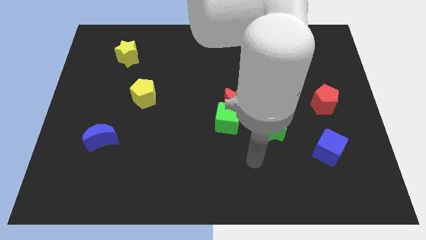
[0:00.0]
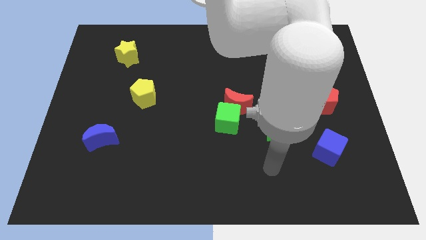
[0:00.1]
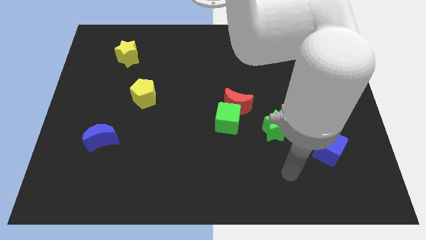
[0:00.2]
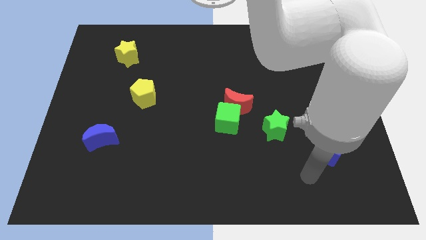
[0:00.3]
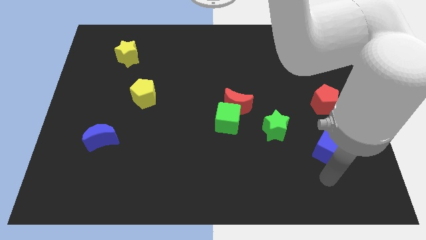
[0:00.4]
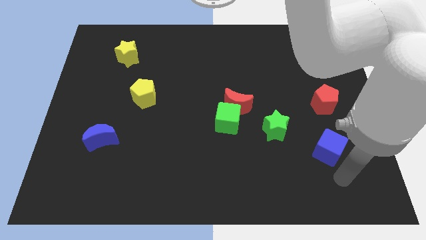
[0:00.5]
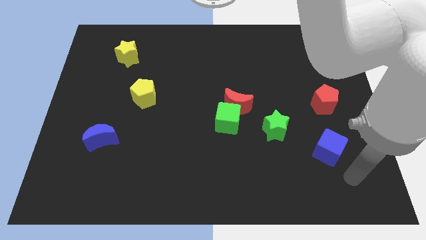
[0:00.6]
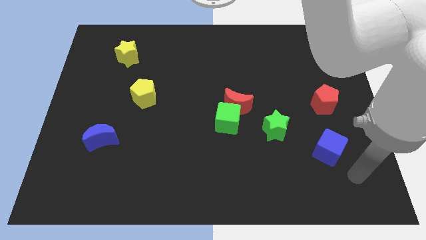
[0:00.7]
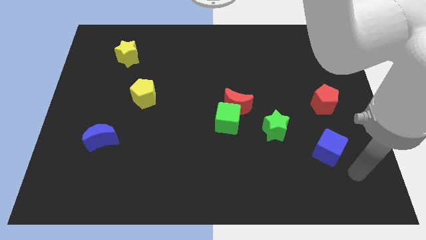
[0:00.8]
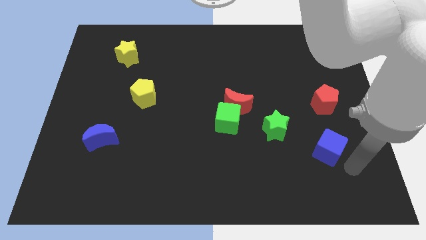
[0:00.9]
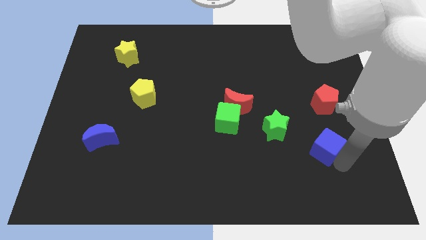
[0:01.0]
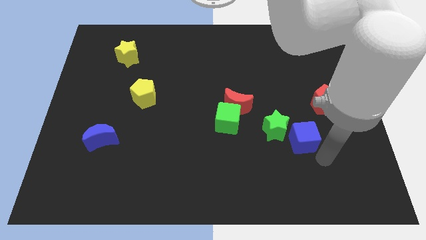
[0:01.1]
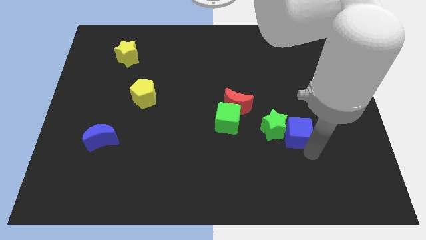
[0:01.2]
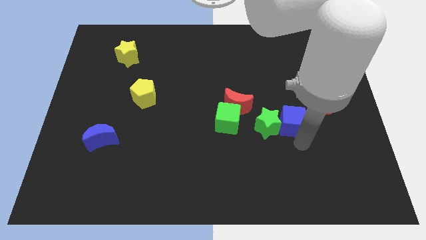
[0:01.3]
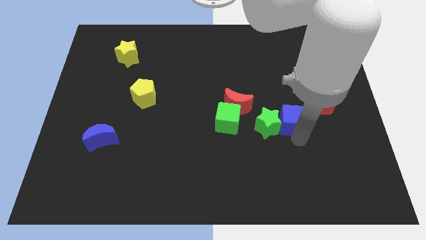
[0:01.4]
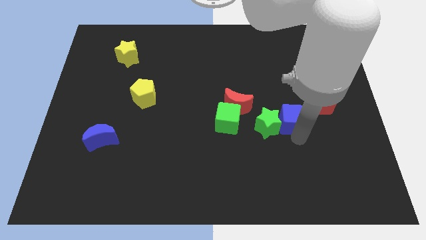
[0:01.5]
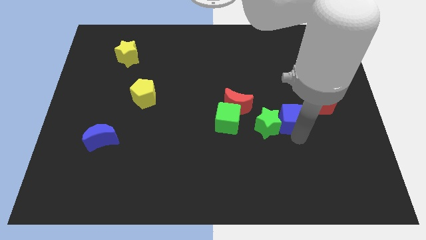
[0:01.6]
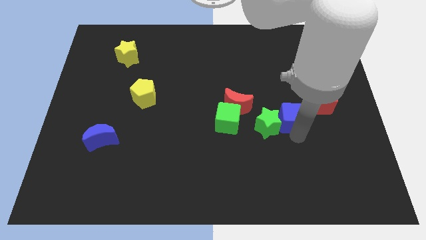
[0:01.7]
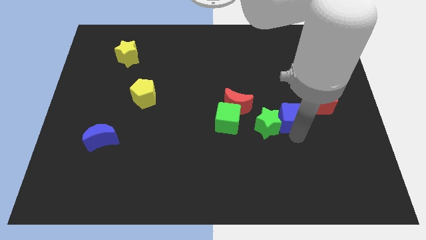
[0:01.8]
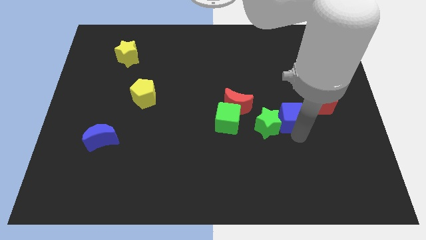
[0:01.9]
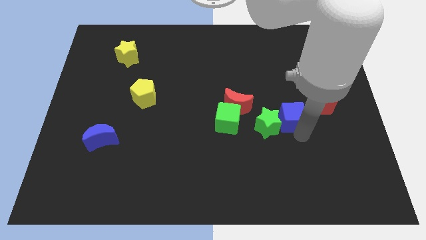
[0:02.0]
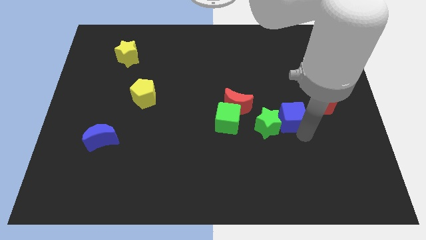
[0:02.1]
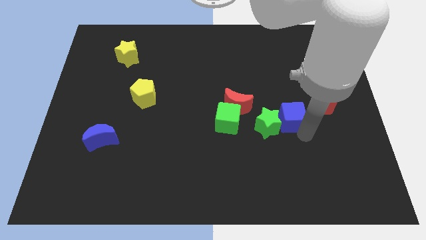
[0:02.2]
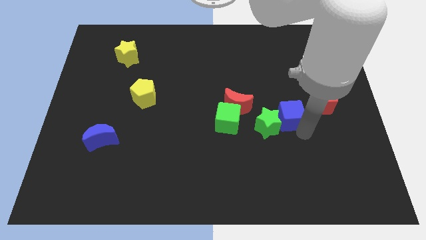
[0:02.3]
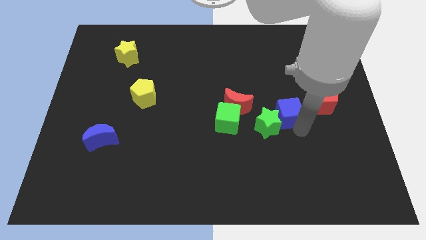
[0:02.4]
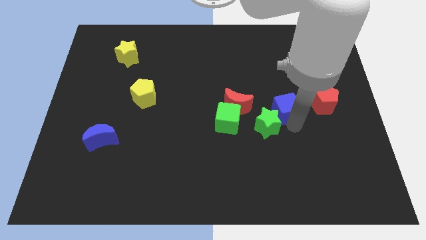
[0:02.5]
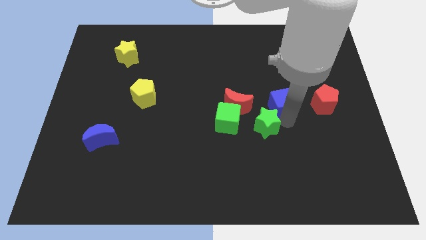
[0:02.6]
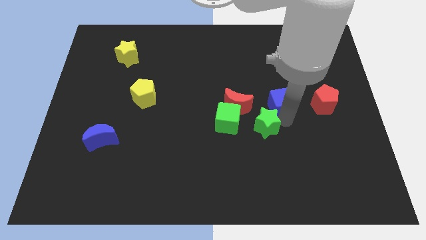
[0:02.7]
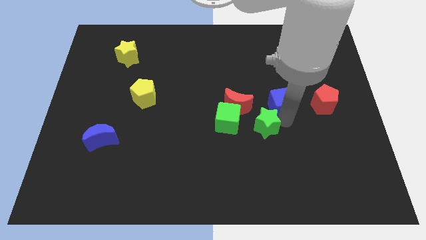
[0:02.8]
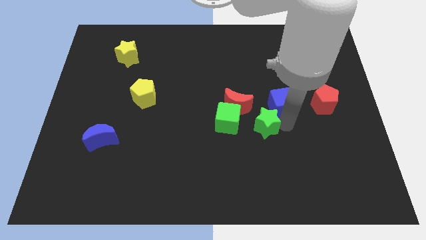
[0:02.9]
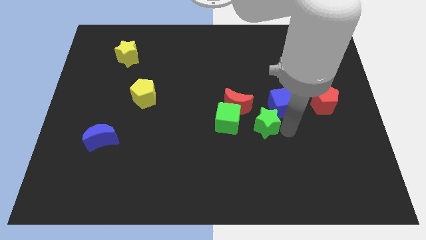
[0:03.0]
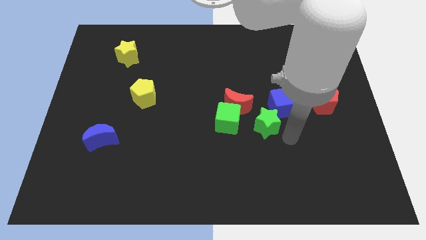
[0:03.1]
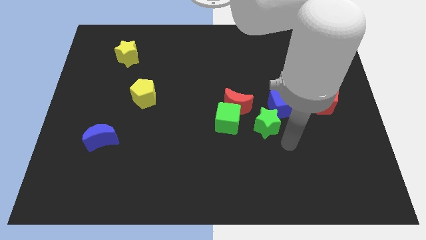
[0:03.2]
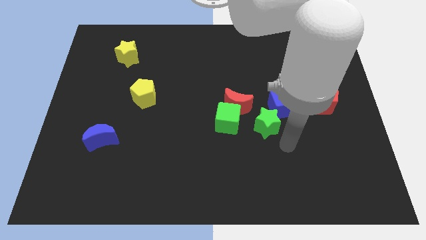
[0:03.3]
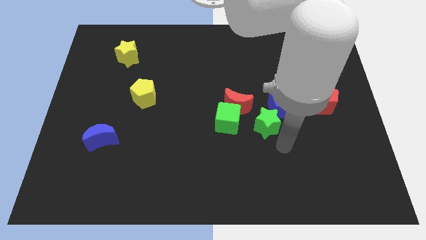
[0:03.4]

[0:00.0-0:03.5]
put the blue cube at the top right of the green star

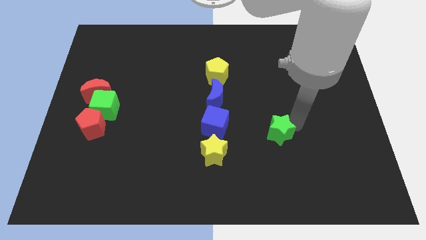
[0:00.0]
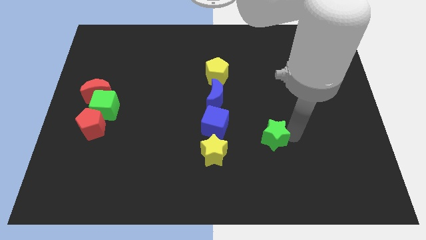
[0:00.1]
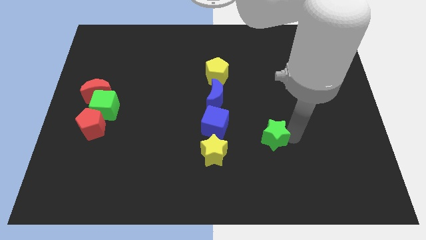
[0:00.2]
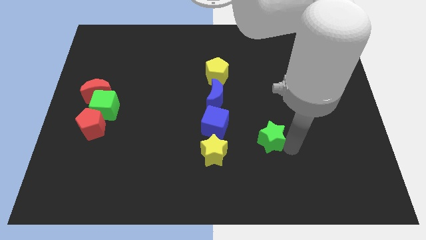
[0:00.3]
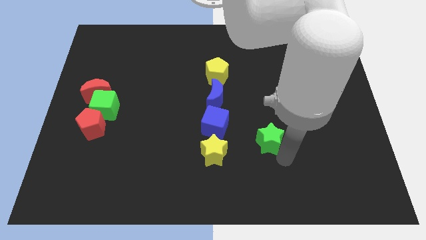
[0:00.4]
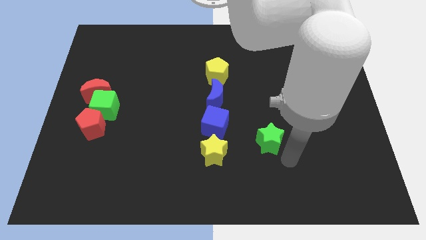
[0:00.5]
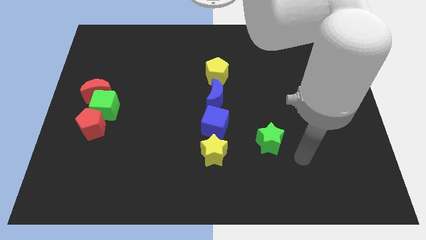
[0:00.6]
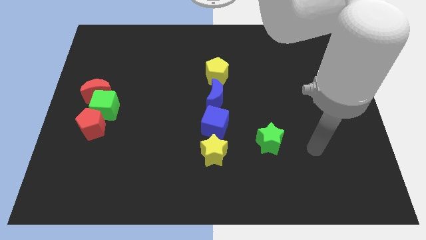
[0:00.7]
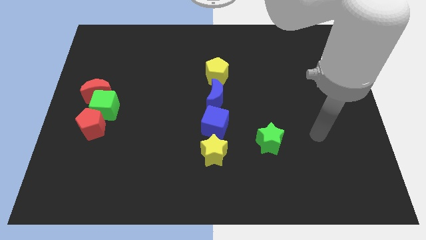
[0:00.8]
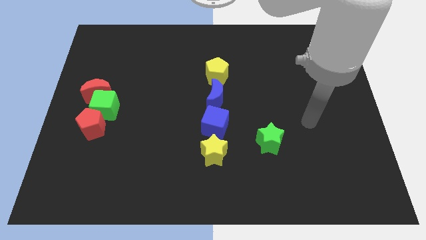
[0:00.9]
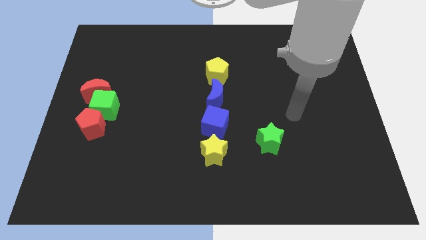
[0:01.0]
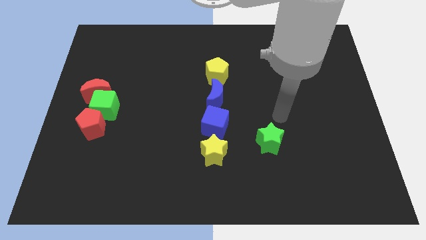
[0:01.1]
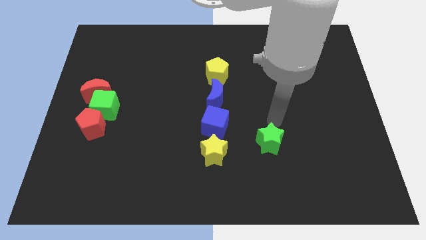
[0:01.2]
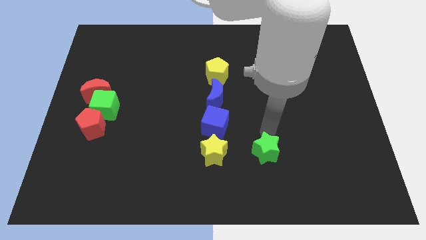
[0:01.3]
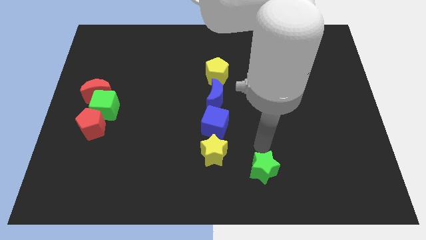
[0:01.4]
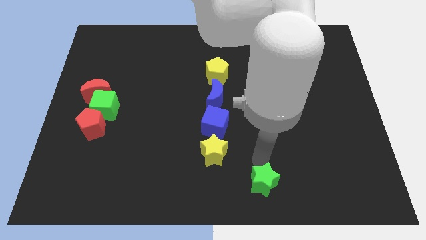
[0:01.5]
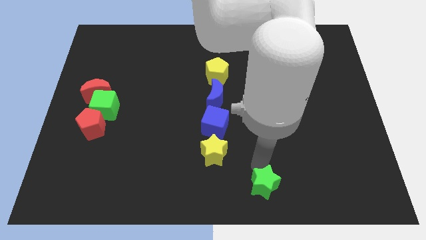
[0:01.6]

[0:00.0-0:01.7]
move the green star to the bottom right of the yellow star

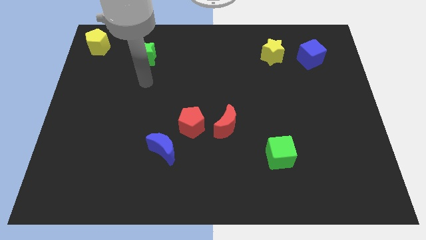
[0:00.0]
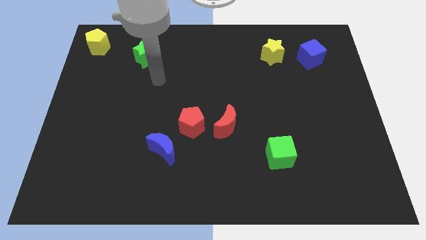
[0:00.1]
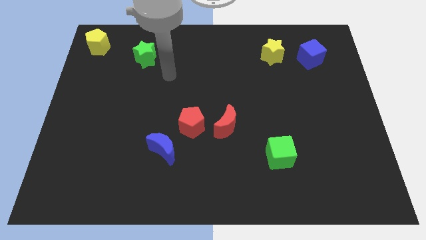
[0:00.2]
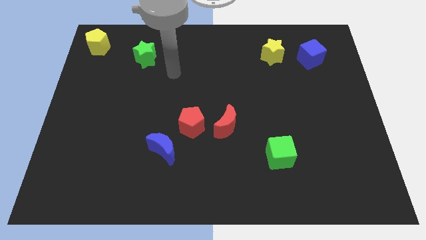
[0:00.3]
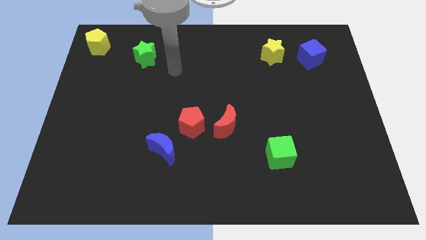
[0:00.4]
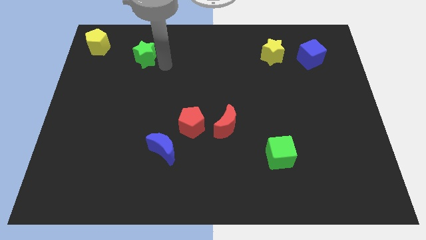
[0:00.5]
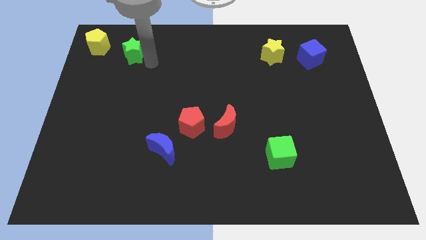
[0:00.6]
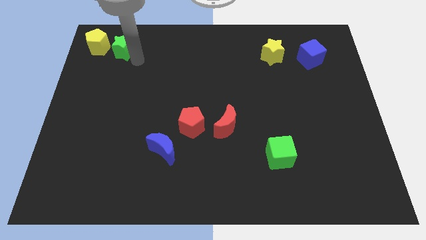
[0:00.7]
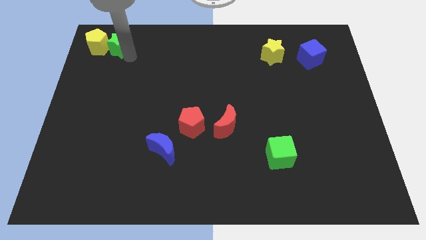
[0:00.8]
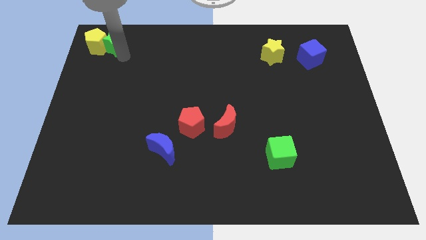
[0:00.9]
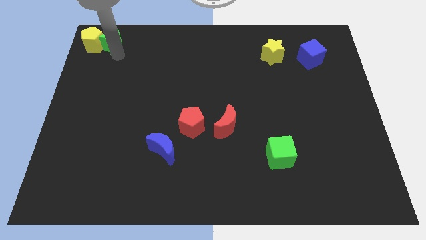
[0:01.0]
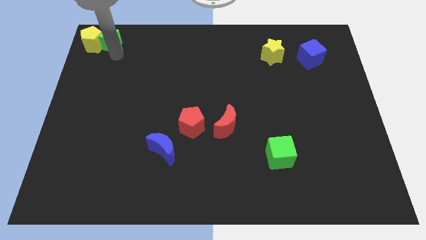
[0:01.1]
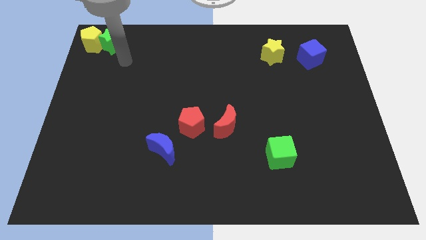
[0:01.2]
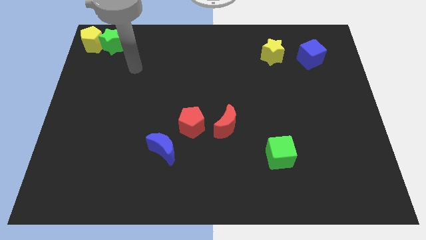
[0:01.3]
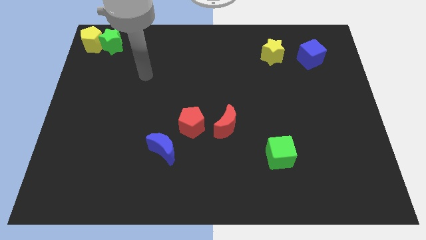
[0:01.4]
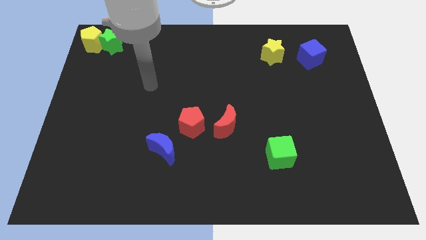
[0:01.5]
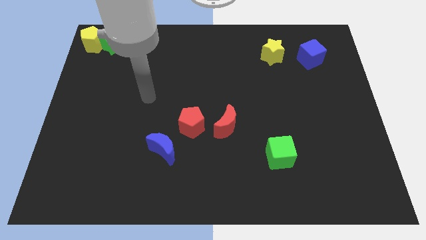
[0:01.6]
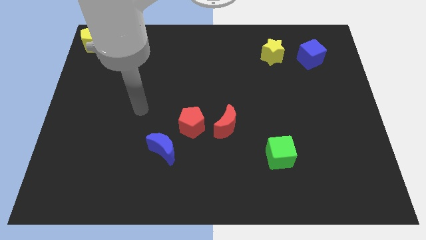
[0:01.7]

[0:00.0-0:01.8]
move green star to the top left corner of the board

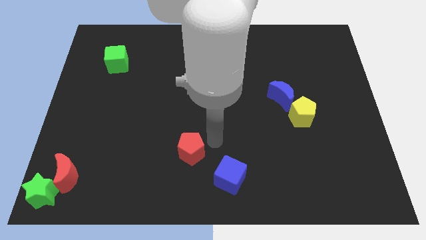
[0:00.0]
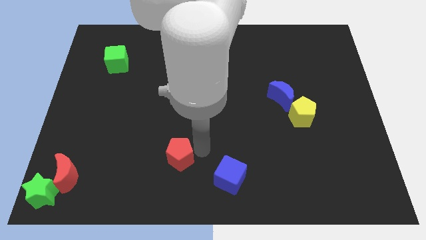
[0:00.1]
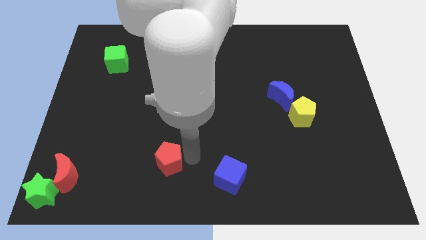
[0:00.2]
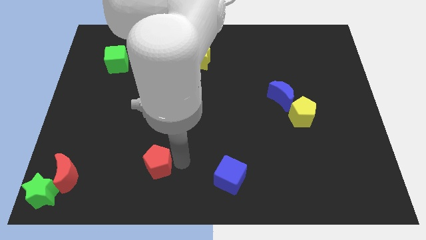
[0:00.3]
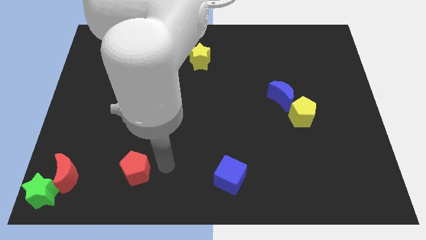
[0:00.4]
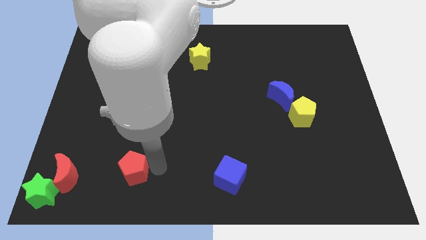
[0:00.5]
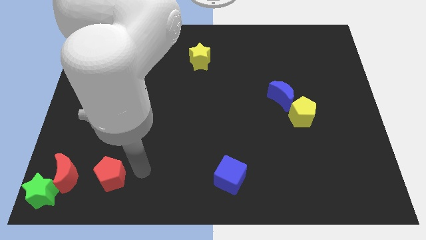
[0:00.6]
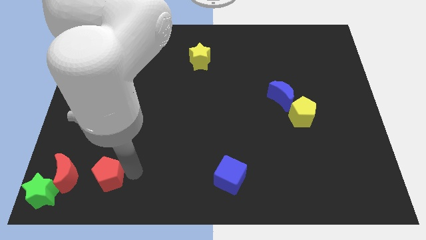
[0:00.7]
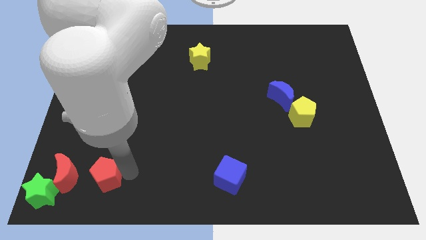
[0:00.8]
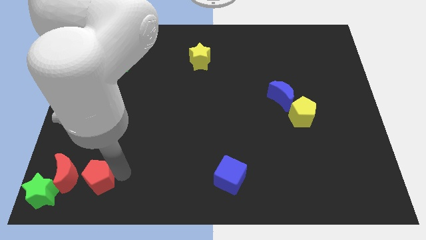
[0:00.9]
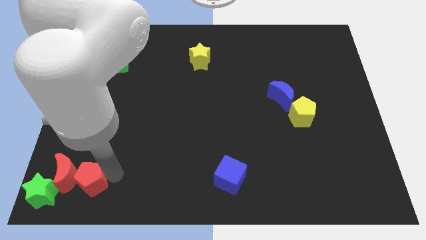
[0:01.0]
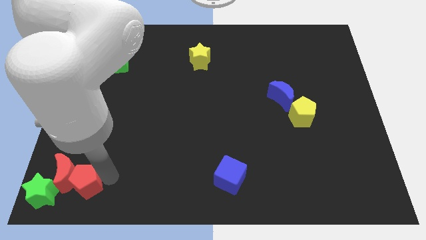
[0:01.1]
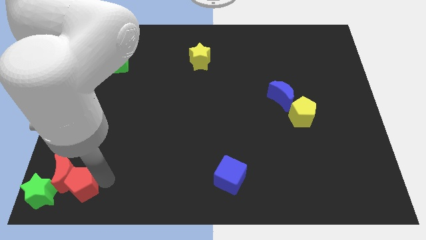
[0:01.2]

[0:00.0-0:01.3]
place red pentagon into the red moon

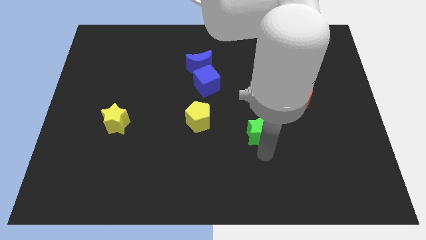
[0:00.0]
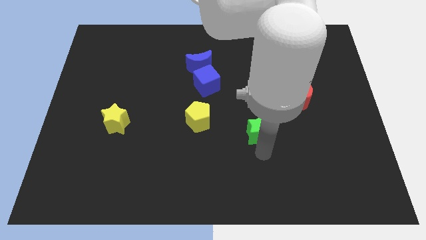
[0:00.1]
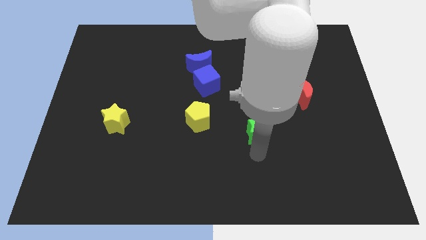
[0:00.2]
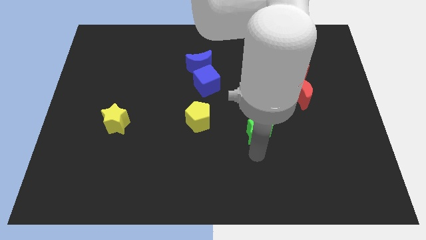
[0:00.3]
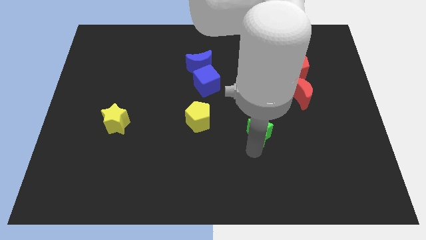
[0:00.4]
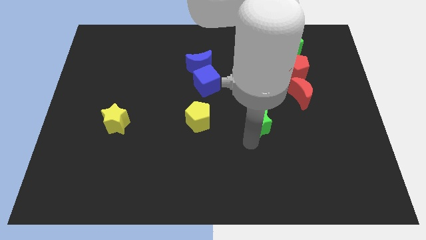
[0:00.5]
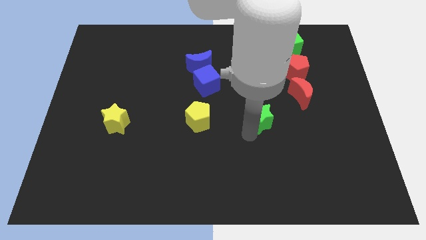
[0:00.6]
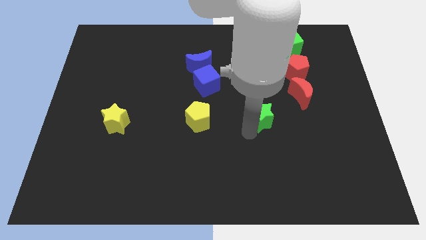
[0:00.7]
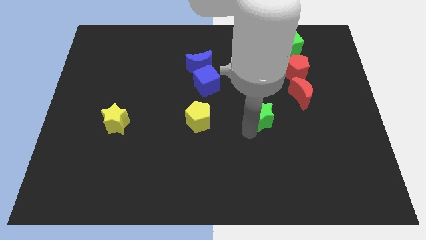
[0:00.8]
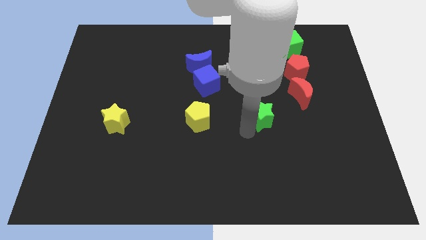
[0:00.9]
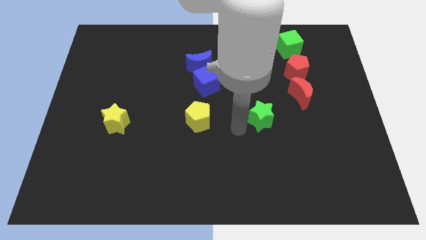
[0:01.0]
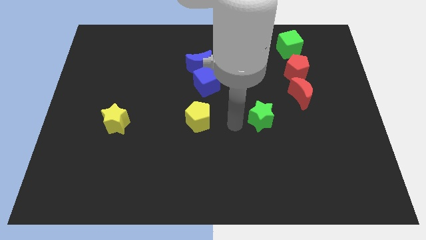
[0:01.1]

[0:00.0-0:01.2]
put the green star parallel to the yellow pentagon
